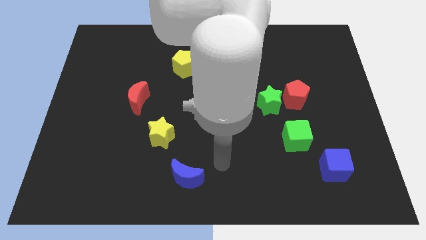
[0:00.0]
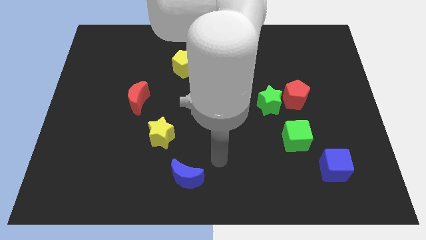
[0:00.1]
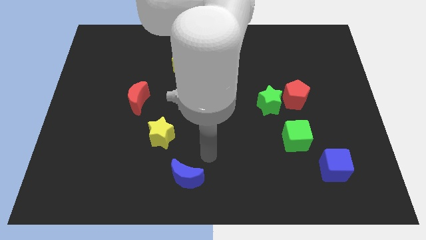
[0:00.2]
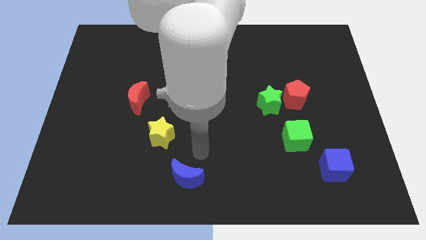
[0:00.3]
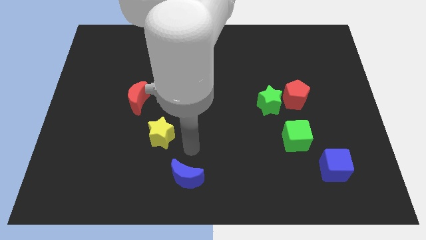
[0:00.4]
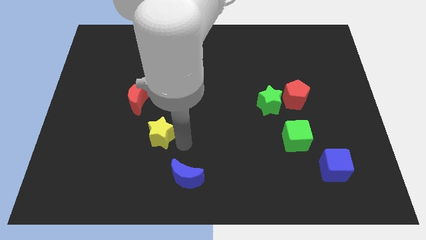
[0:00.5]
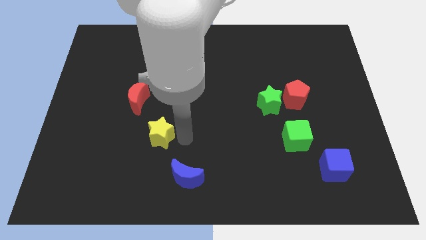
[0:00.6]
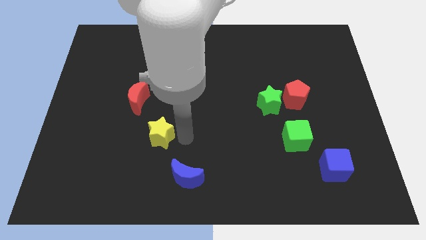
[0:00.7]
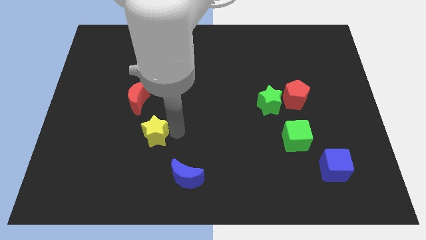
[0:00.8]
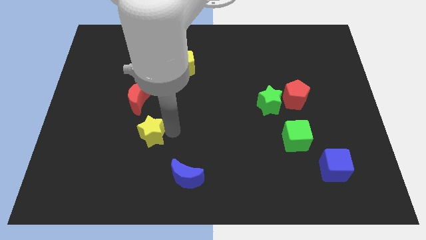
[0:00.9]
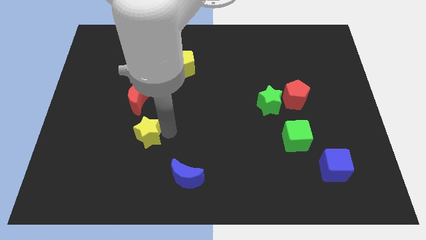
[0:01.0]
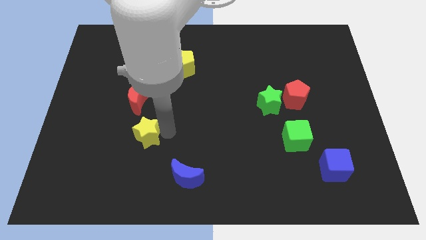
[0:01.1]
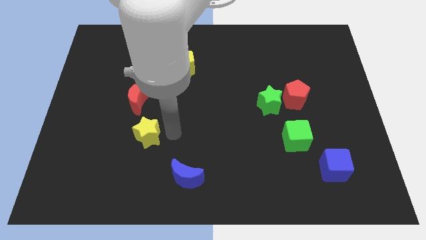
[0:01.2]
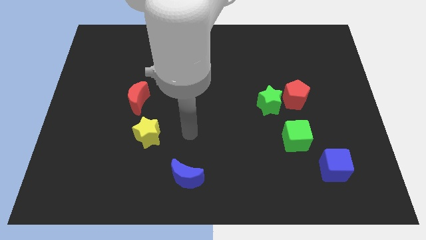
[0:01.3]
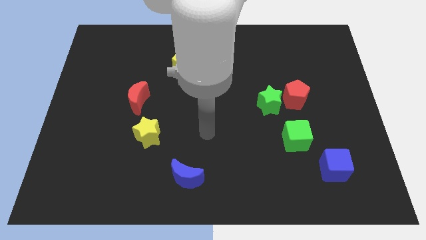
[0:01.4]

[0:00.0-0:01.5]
move the yellow star slightly down to the red moon

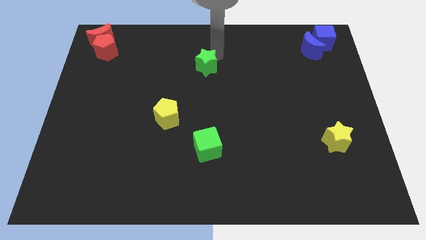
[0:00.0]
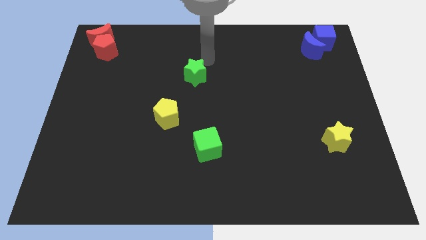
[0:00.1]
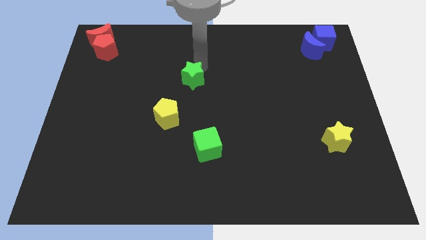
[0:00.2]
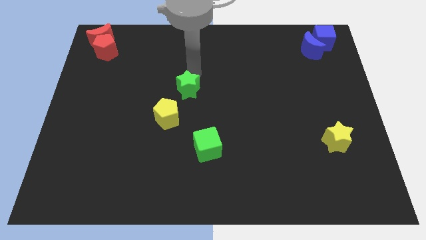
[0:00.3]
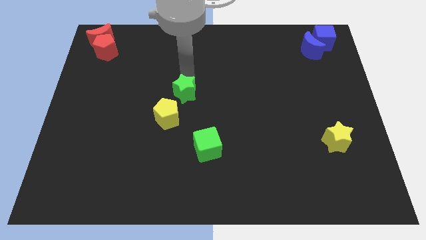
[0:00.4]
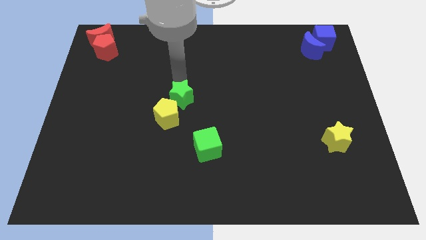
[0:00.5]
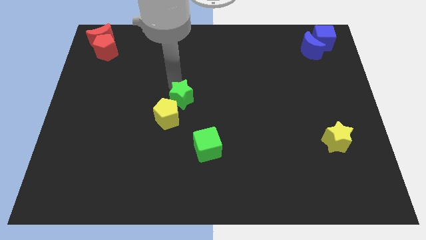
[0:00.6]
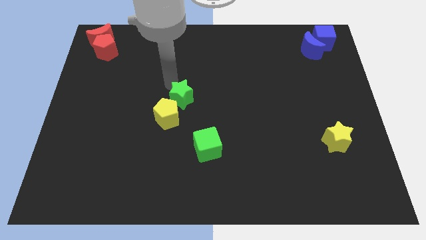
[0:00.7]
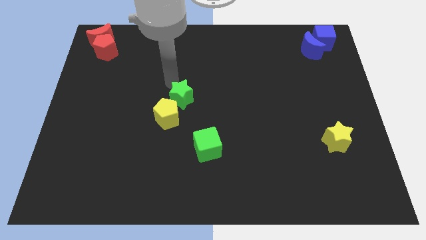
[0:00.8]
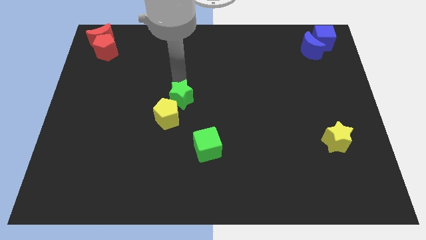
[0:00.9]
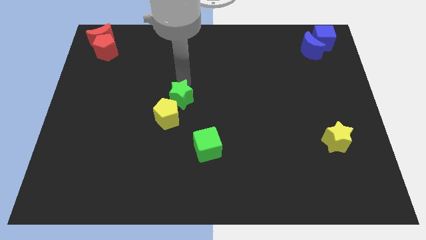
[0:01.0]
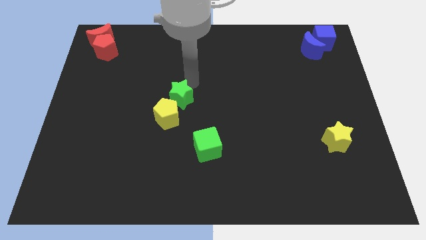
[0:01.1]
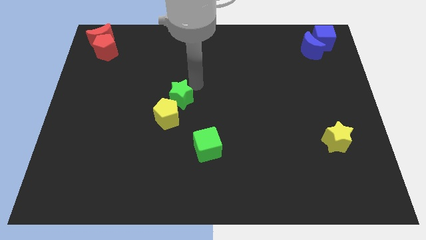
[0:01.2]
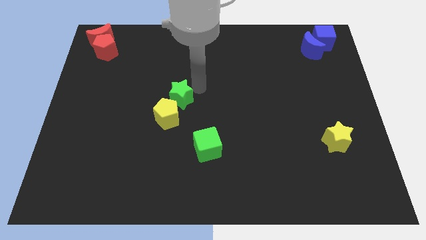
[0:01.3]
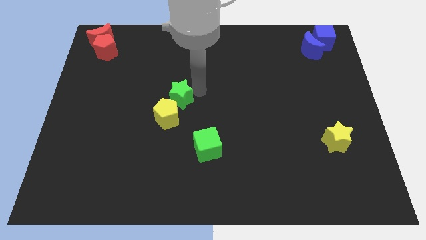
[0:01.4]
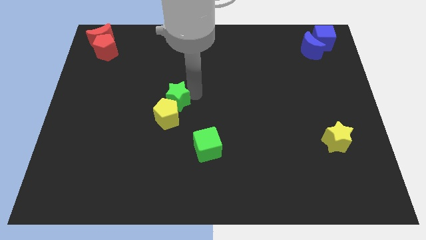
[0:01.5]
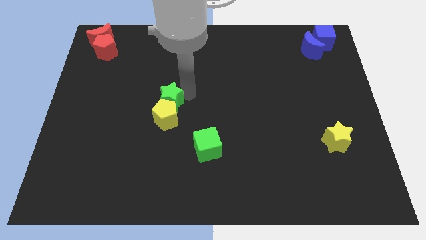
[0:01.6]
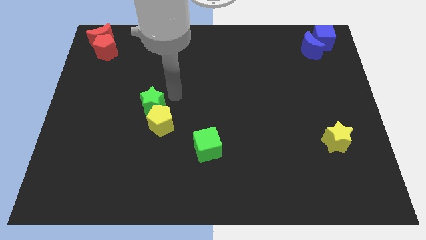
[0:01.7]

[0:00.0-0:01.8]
push the green star into the yellow pentagon

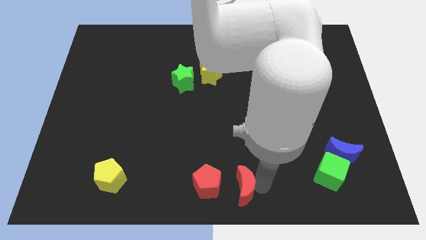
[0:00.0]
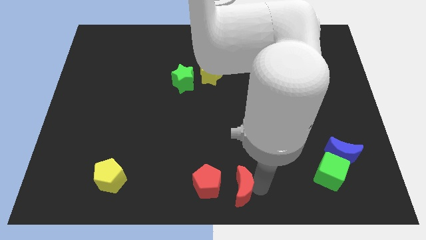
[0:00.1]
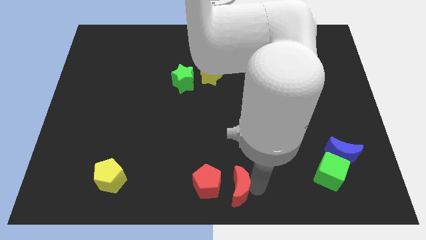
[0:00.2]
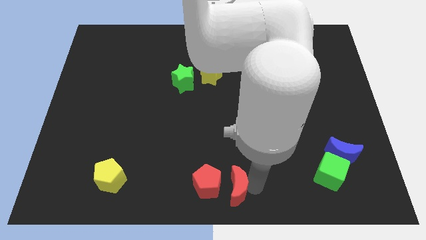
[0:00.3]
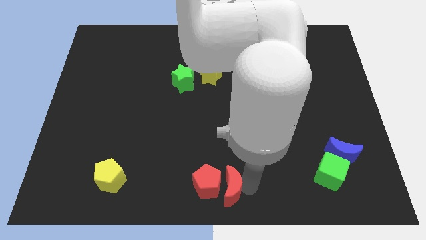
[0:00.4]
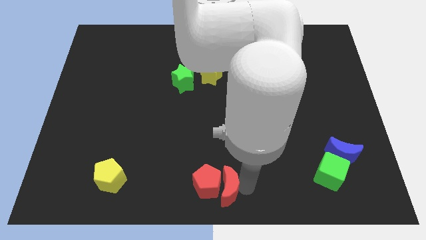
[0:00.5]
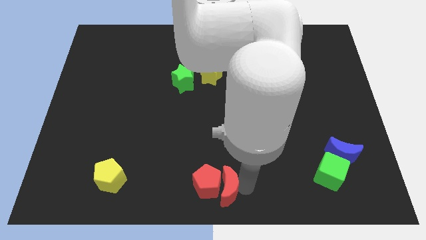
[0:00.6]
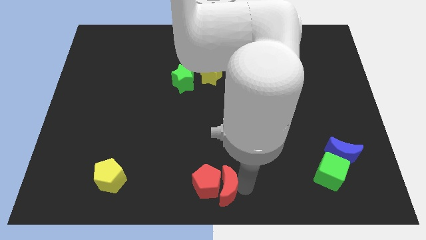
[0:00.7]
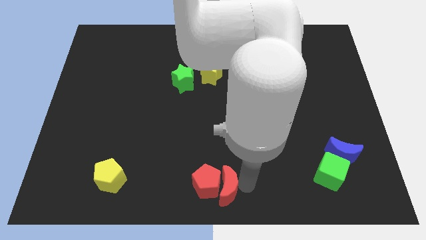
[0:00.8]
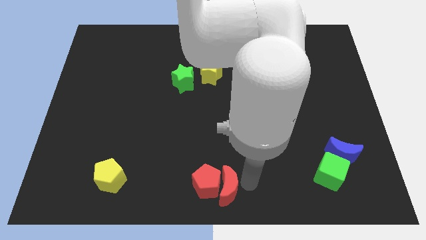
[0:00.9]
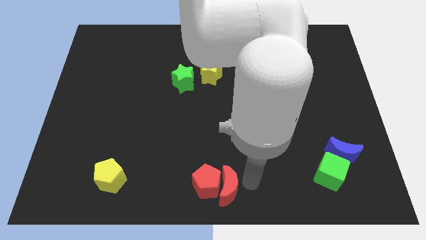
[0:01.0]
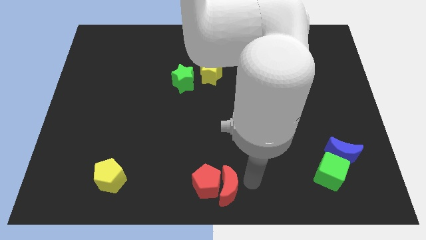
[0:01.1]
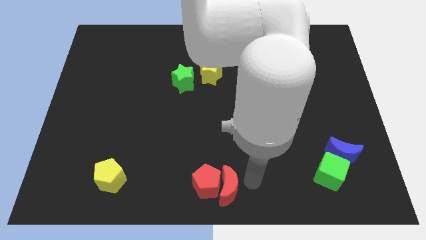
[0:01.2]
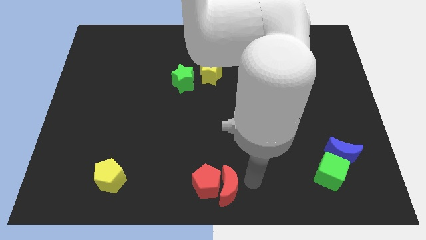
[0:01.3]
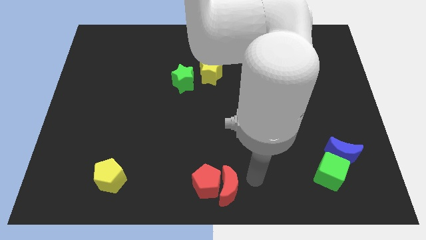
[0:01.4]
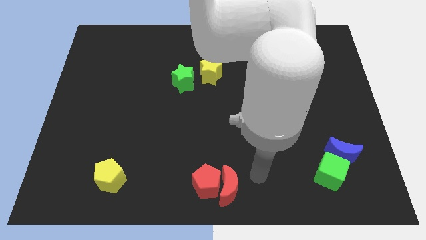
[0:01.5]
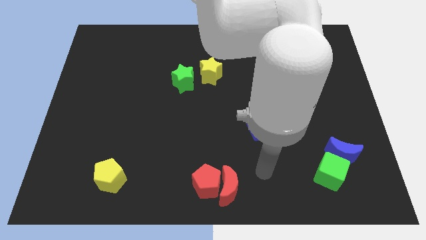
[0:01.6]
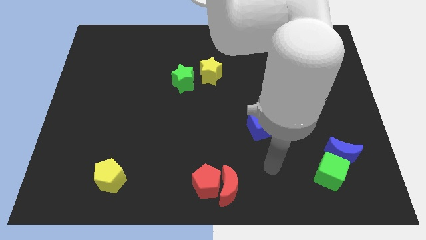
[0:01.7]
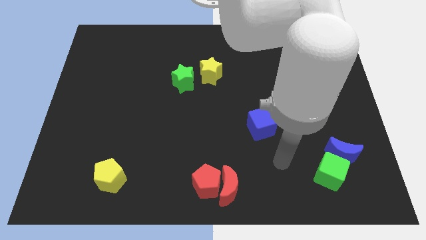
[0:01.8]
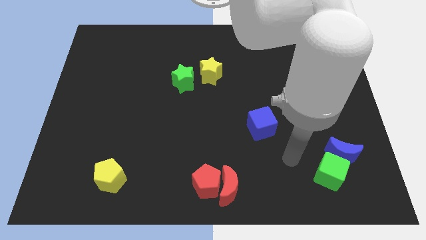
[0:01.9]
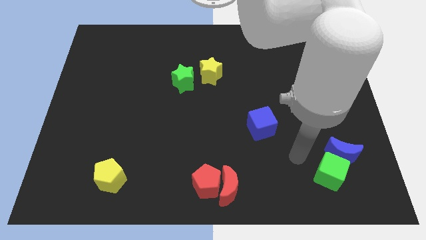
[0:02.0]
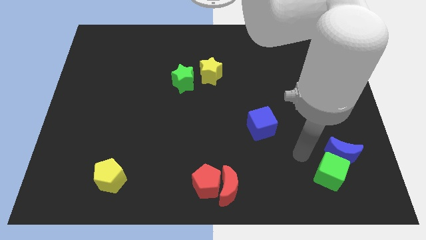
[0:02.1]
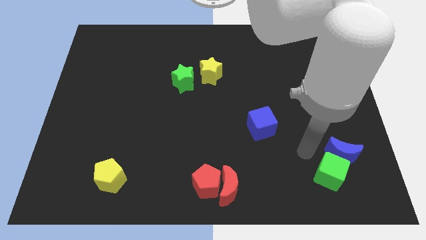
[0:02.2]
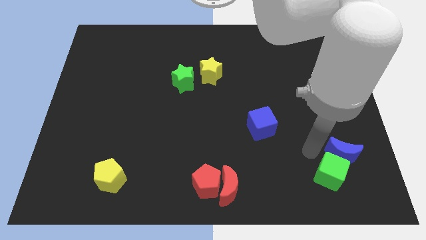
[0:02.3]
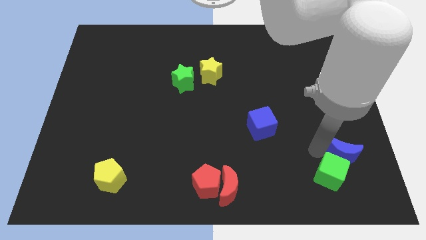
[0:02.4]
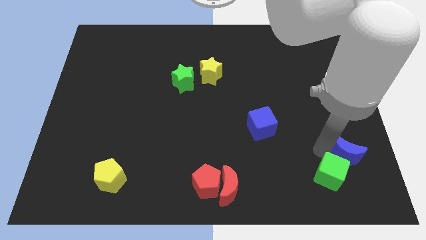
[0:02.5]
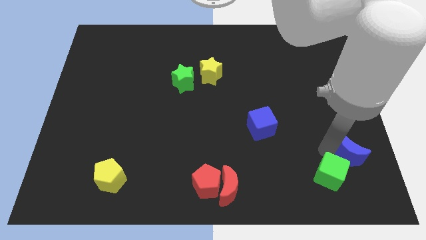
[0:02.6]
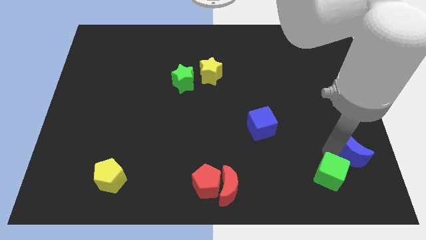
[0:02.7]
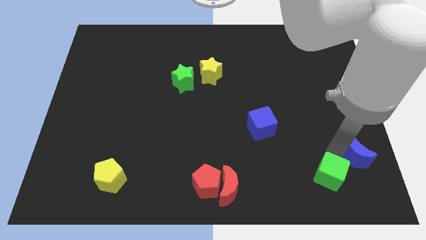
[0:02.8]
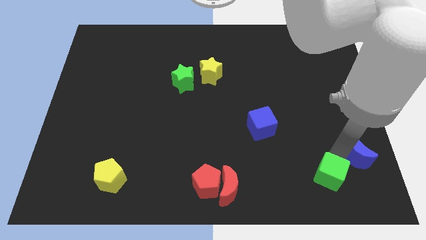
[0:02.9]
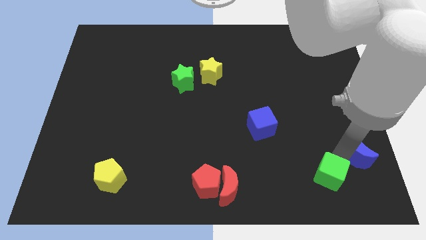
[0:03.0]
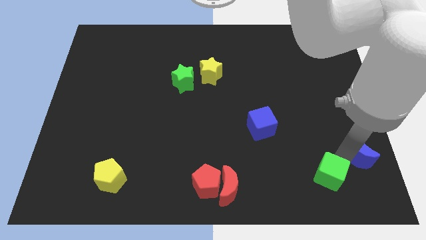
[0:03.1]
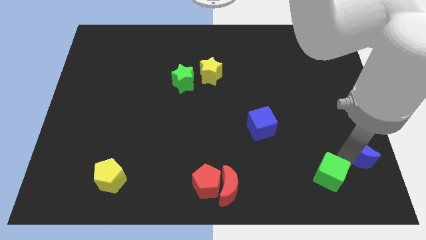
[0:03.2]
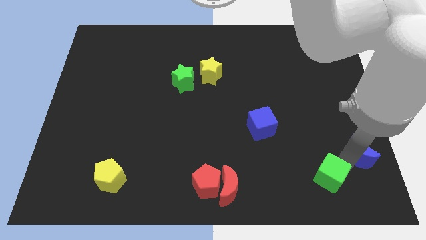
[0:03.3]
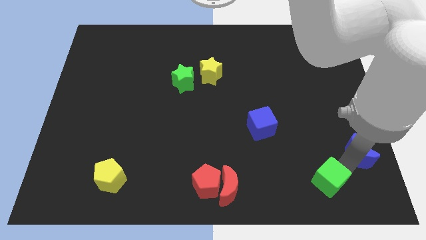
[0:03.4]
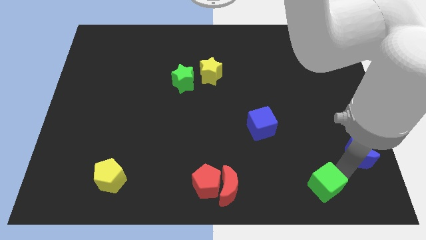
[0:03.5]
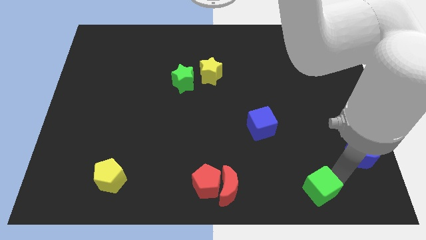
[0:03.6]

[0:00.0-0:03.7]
separate the blue crescent from green cube

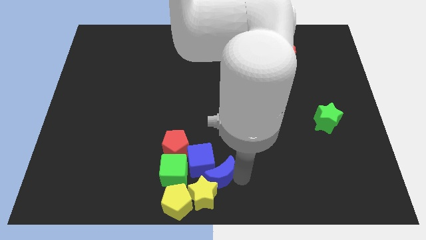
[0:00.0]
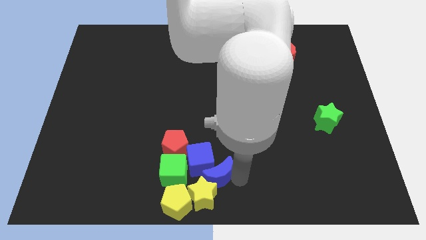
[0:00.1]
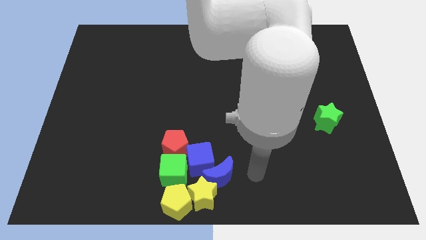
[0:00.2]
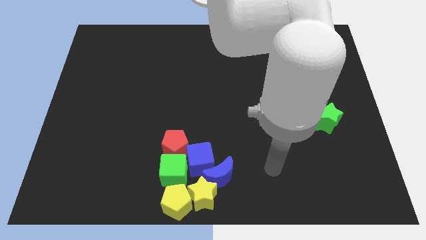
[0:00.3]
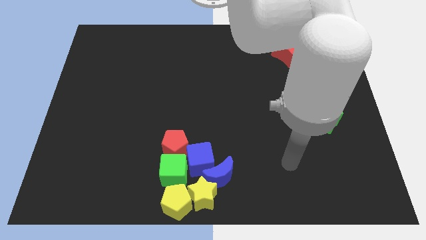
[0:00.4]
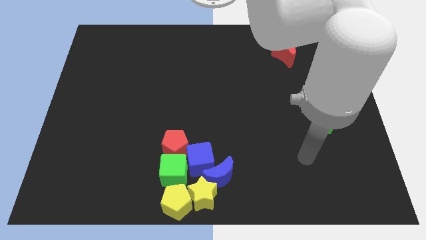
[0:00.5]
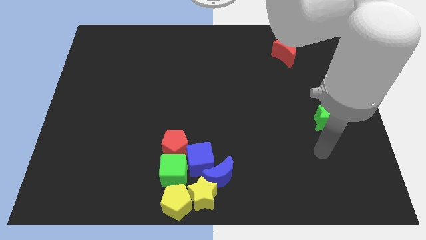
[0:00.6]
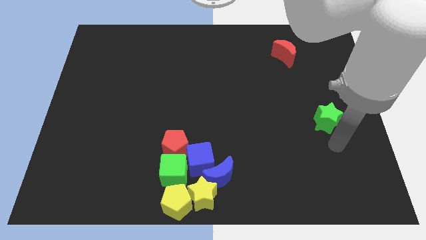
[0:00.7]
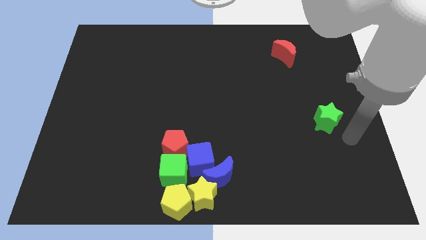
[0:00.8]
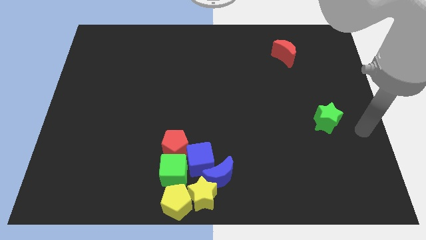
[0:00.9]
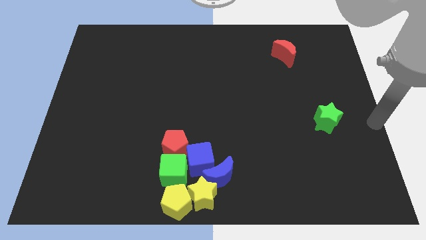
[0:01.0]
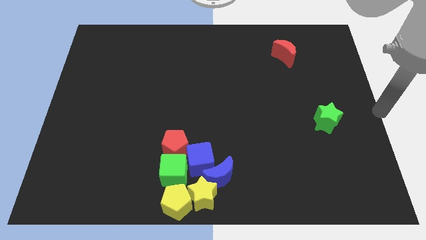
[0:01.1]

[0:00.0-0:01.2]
go away from the blue moon

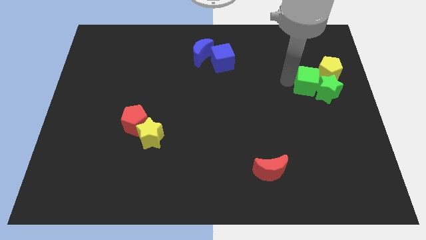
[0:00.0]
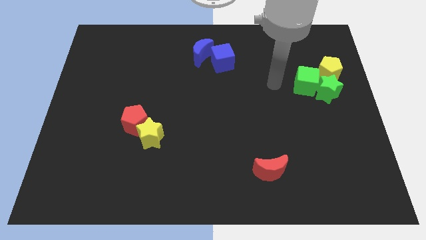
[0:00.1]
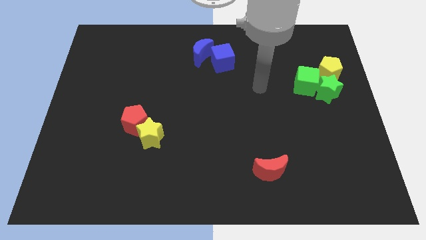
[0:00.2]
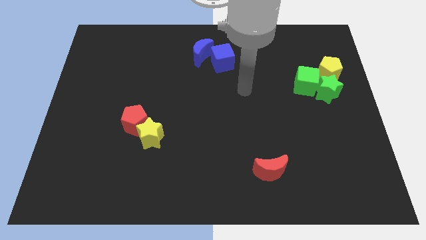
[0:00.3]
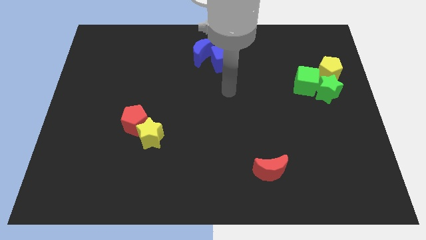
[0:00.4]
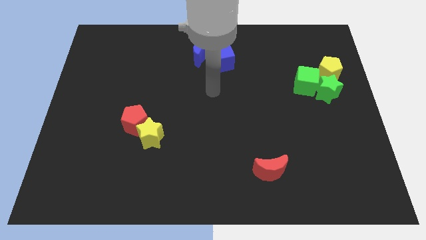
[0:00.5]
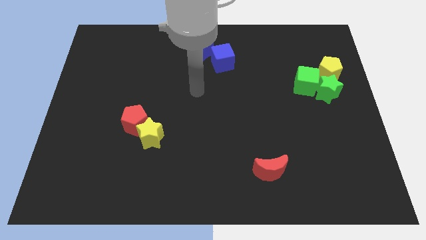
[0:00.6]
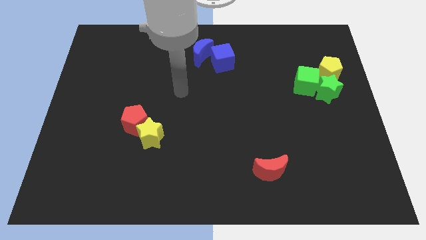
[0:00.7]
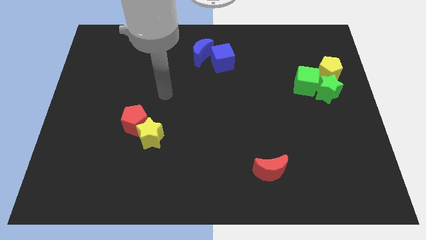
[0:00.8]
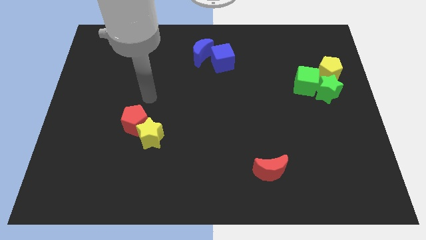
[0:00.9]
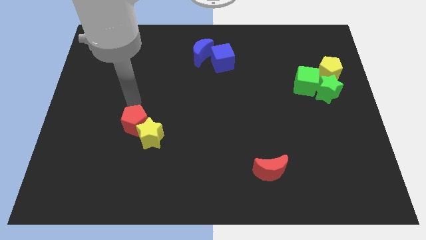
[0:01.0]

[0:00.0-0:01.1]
move your arm away from the green cube
